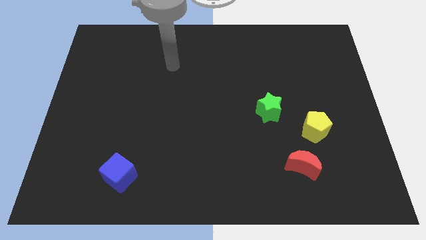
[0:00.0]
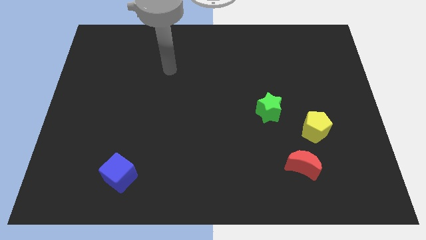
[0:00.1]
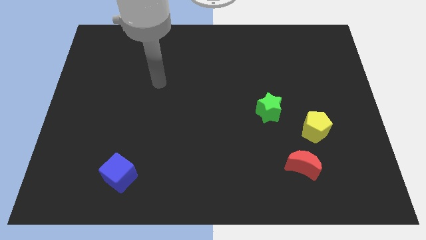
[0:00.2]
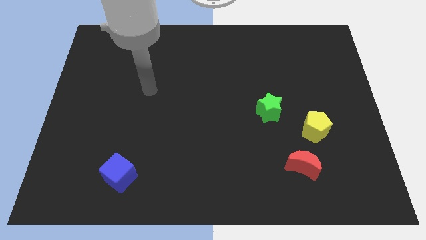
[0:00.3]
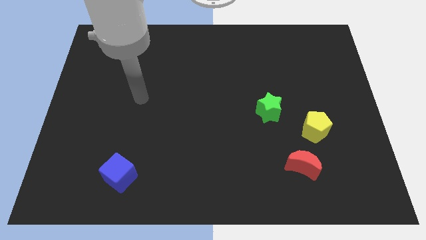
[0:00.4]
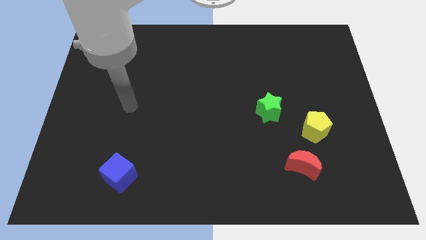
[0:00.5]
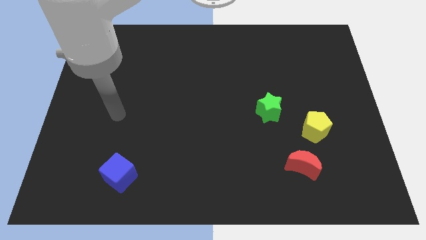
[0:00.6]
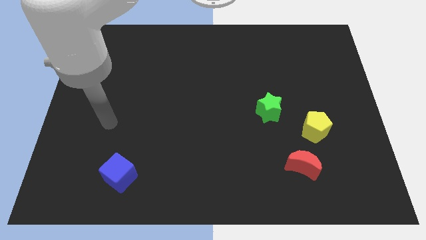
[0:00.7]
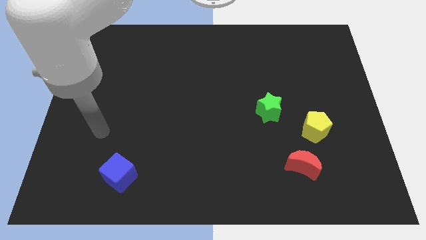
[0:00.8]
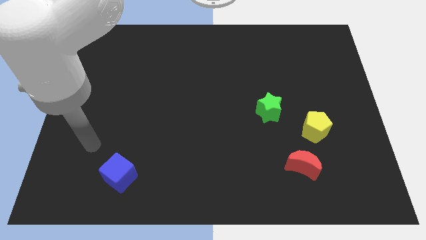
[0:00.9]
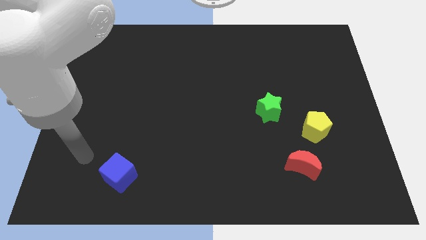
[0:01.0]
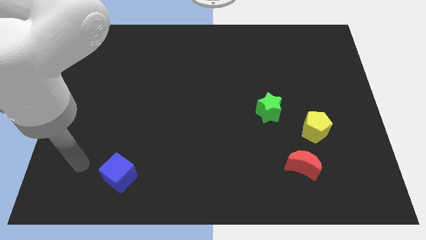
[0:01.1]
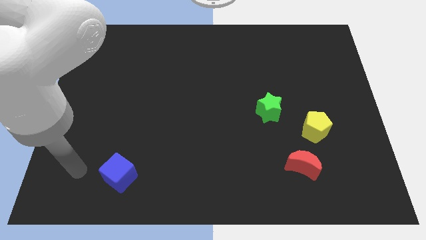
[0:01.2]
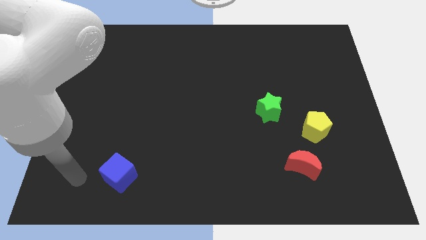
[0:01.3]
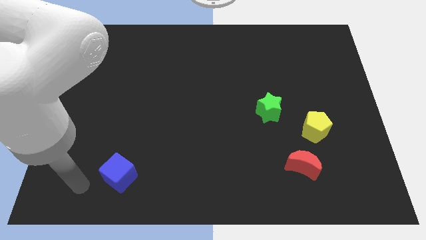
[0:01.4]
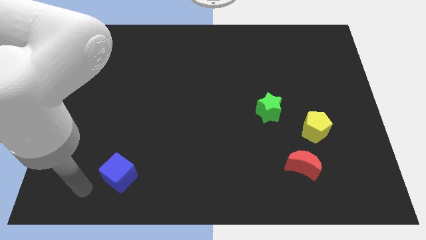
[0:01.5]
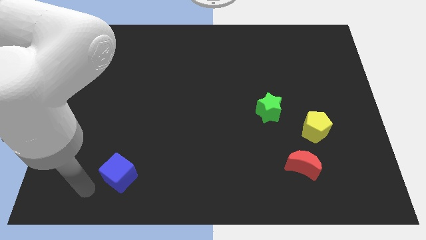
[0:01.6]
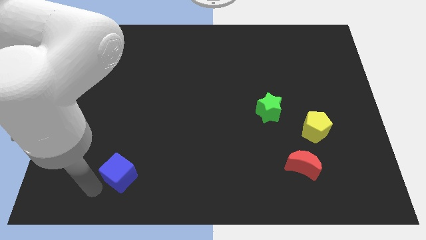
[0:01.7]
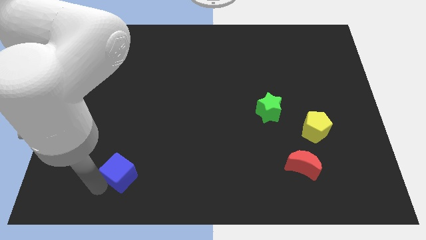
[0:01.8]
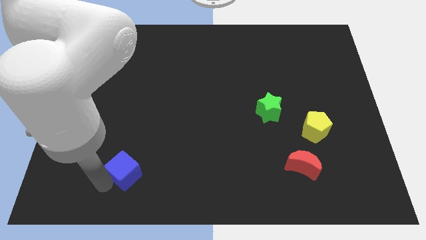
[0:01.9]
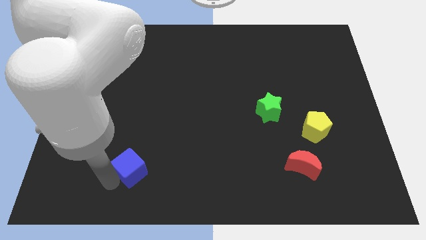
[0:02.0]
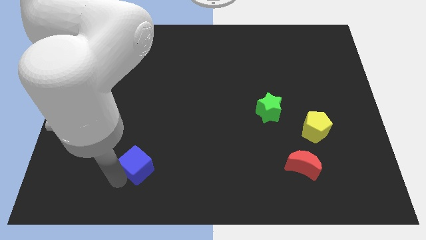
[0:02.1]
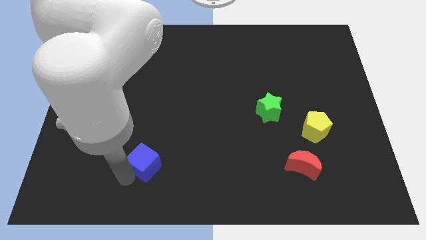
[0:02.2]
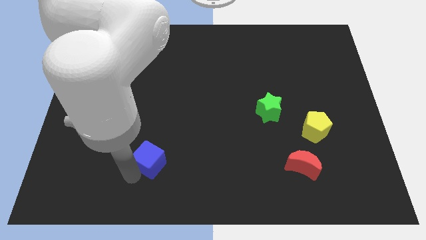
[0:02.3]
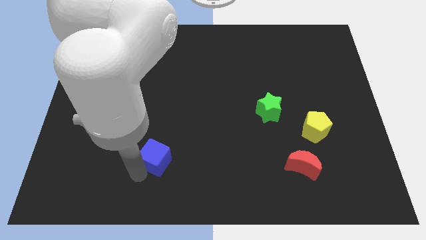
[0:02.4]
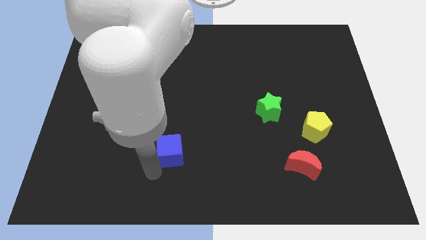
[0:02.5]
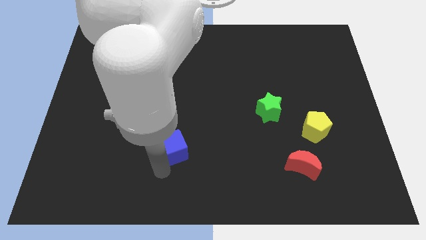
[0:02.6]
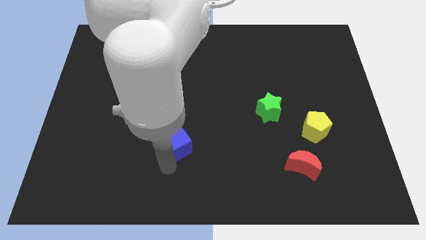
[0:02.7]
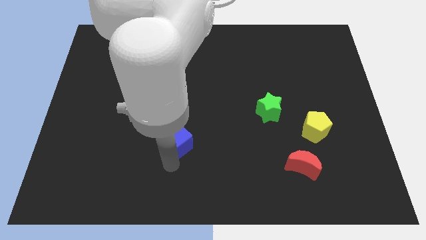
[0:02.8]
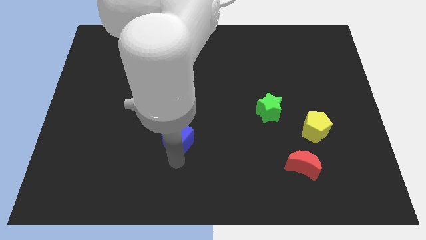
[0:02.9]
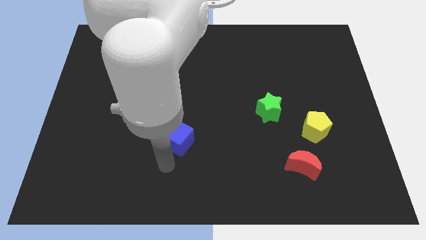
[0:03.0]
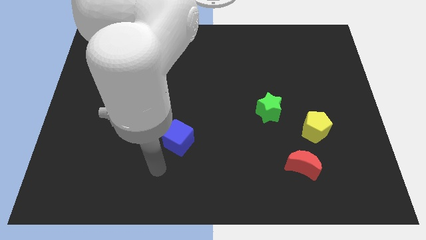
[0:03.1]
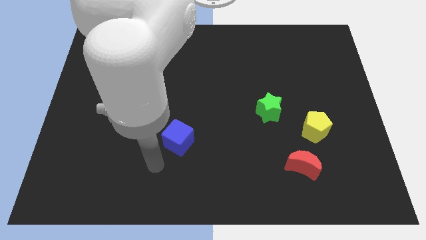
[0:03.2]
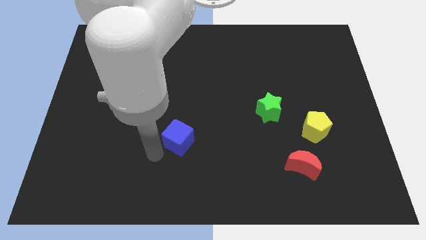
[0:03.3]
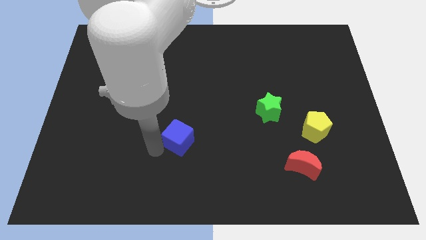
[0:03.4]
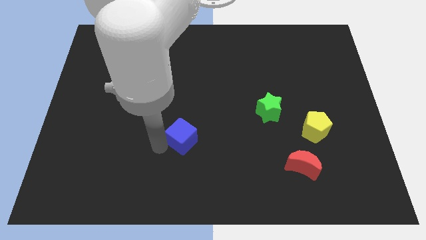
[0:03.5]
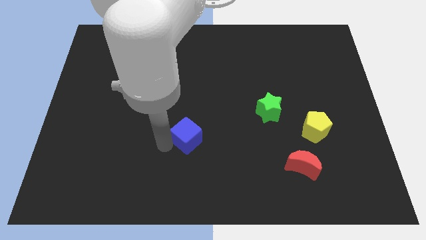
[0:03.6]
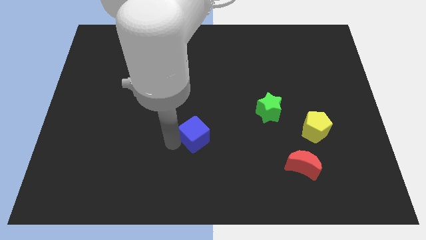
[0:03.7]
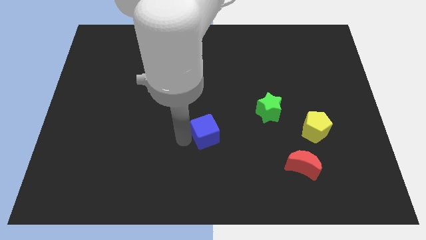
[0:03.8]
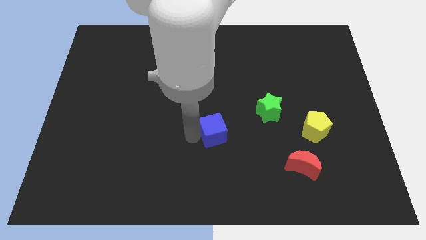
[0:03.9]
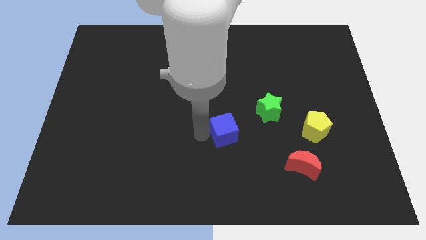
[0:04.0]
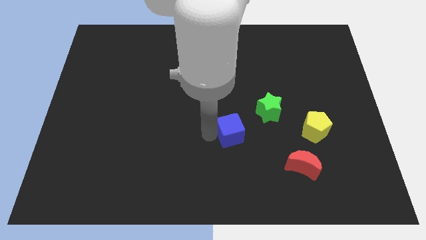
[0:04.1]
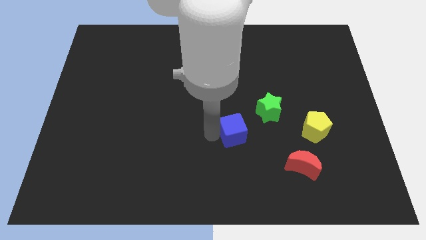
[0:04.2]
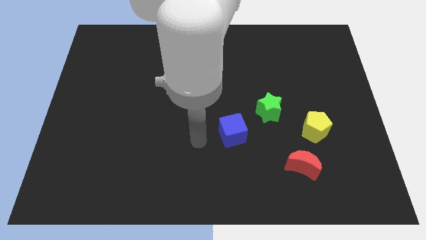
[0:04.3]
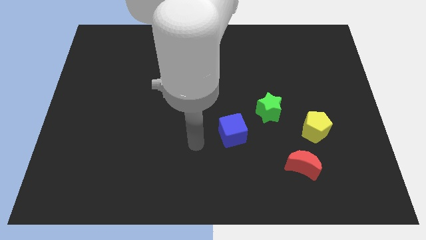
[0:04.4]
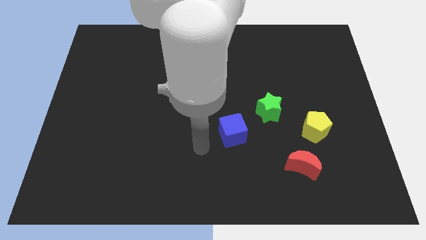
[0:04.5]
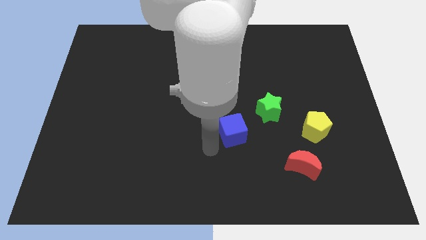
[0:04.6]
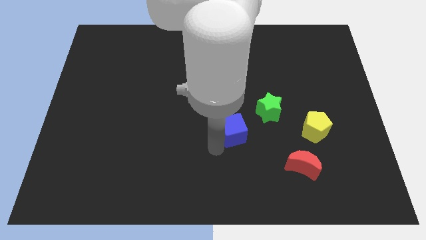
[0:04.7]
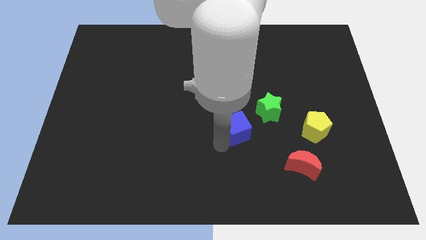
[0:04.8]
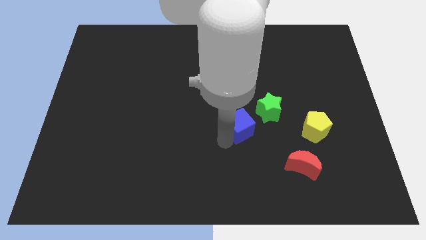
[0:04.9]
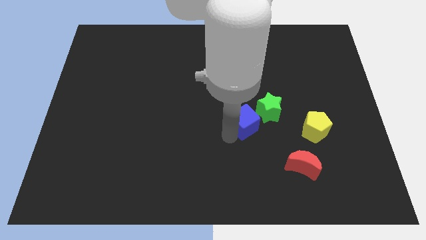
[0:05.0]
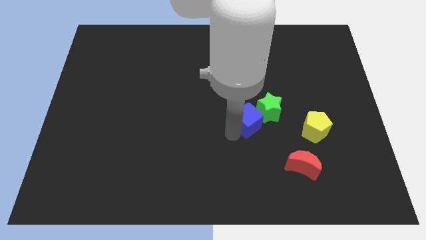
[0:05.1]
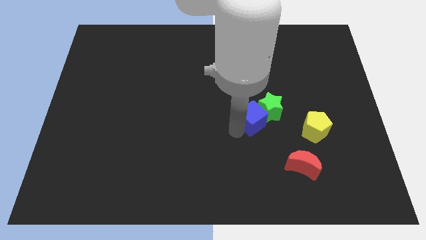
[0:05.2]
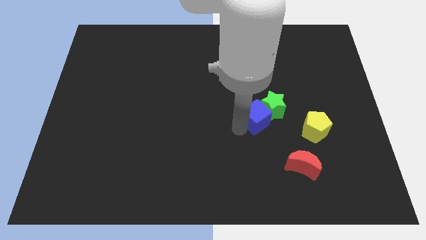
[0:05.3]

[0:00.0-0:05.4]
push the blue cube next to the green block

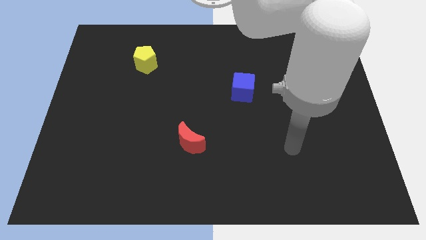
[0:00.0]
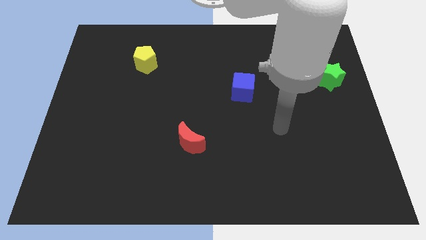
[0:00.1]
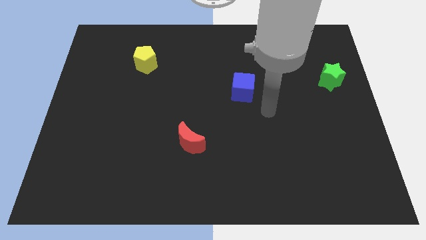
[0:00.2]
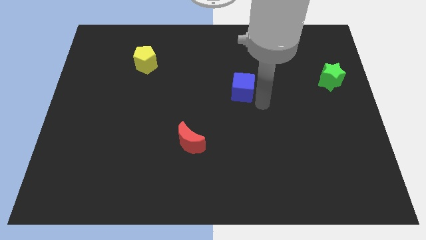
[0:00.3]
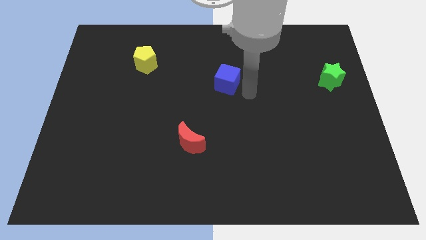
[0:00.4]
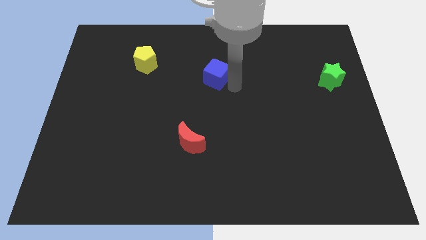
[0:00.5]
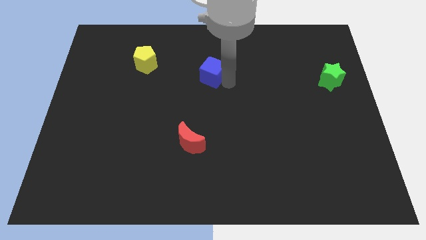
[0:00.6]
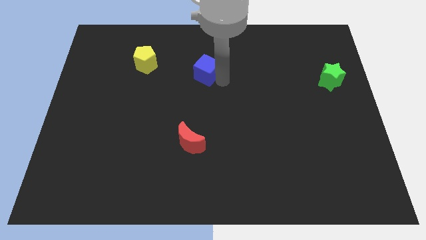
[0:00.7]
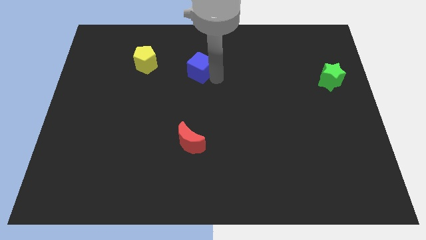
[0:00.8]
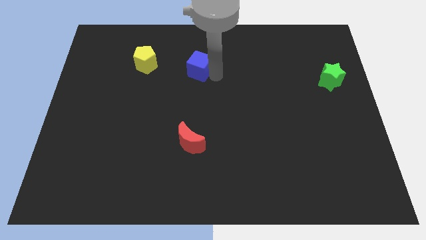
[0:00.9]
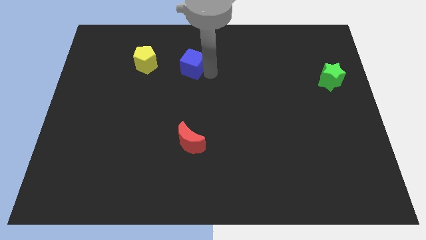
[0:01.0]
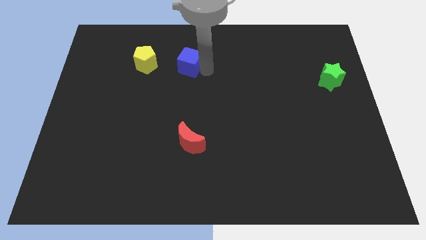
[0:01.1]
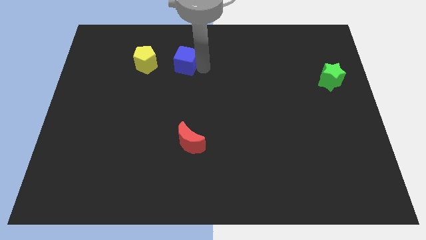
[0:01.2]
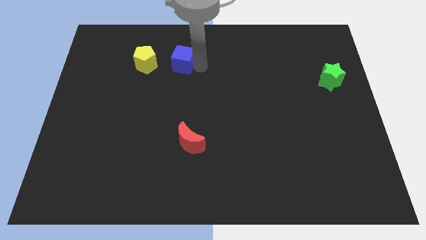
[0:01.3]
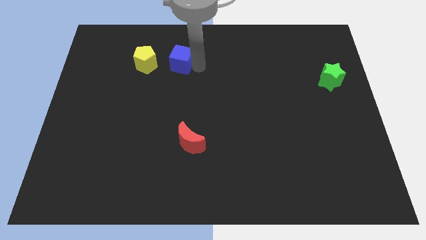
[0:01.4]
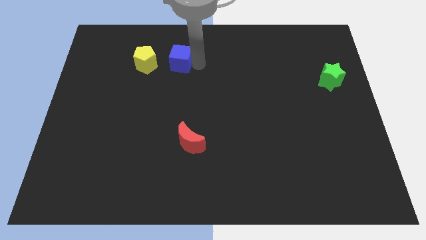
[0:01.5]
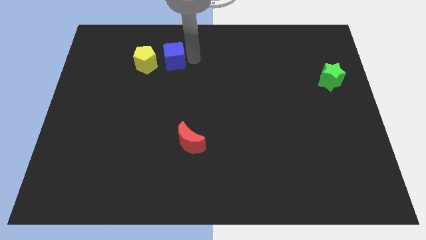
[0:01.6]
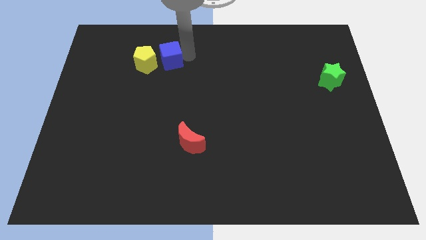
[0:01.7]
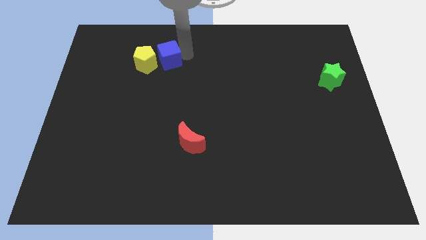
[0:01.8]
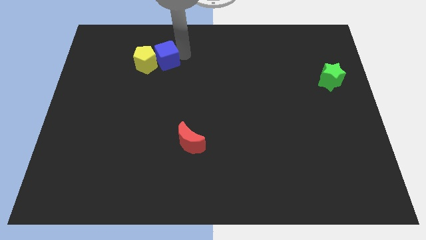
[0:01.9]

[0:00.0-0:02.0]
push the blue block next to the yellow pentagon

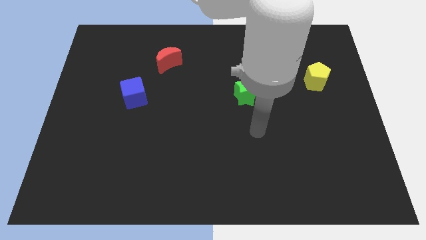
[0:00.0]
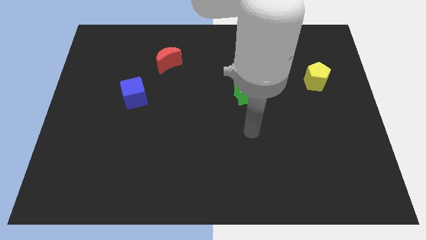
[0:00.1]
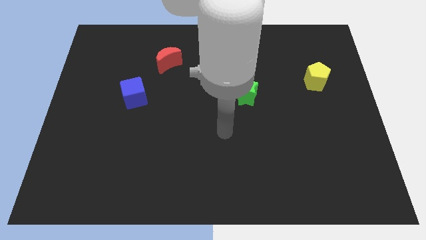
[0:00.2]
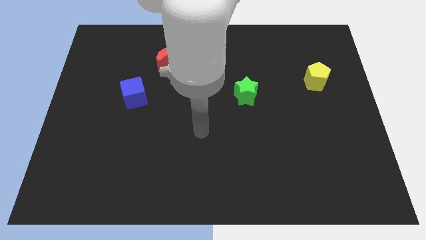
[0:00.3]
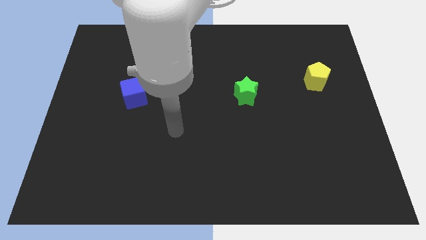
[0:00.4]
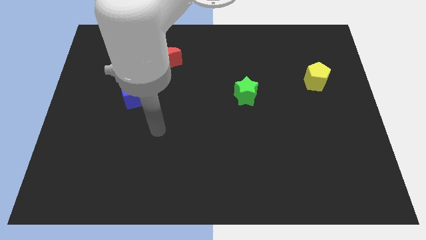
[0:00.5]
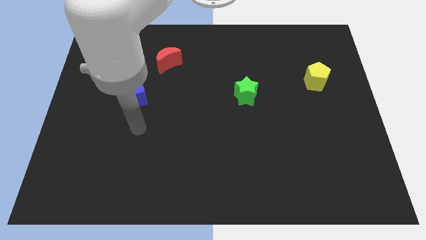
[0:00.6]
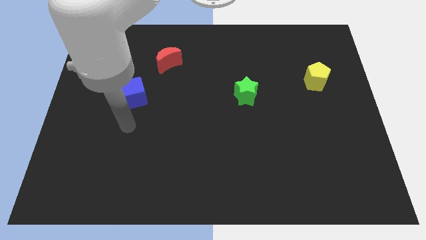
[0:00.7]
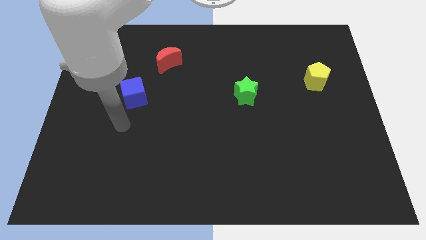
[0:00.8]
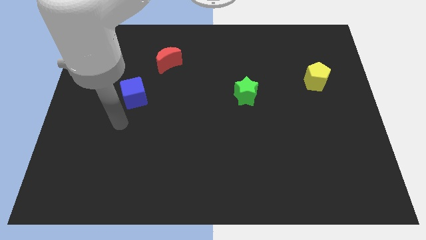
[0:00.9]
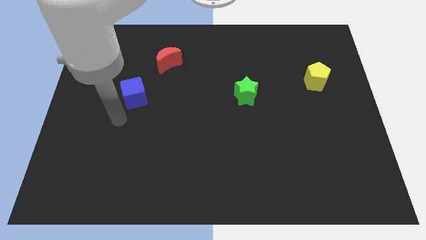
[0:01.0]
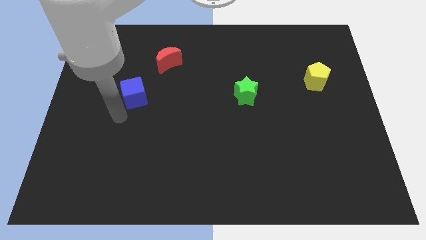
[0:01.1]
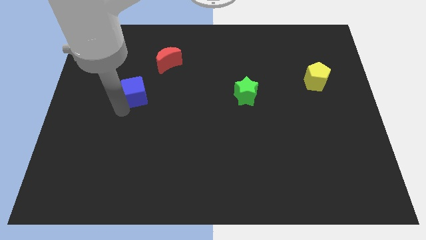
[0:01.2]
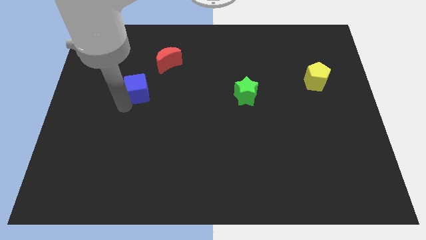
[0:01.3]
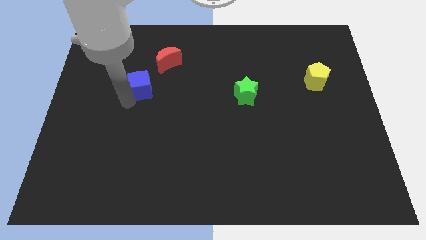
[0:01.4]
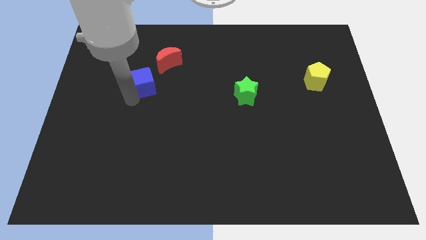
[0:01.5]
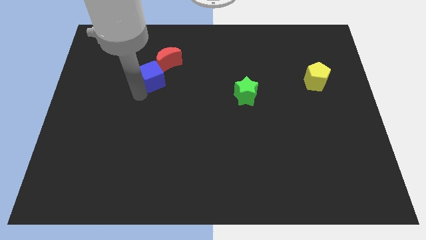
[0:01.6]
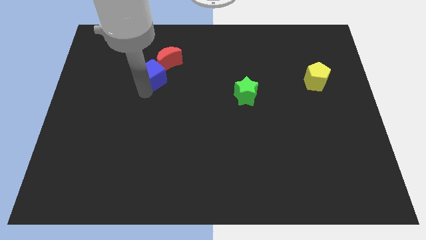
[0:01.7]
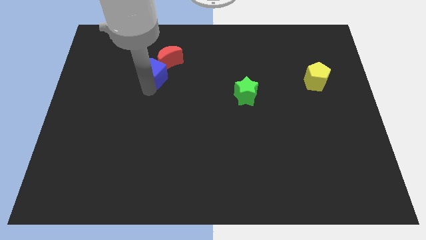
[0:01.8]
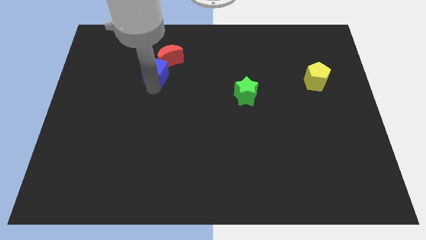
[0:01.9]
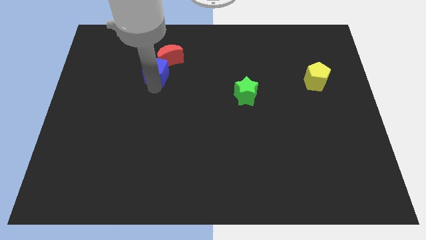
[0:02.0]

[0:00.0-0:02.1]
slide the blue block towards the red moon
